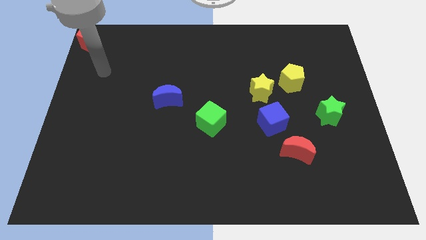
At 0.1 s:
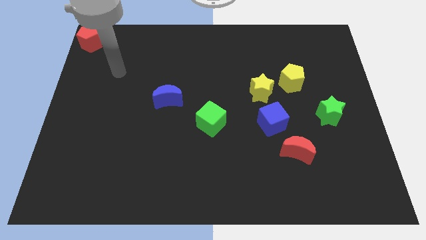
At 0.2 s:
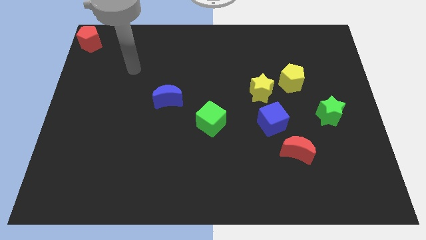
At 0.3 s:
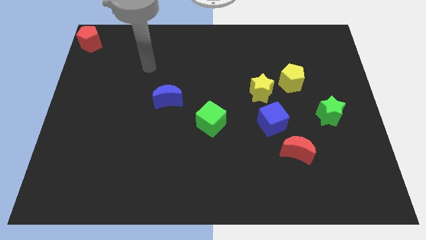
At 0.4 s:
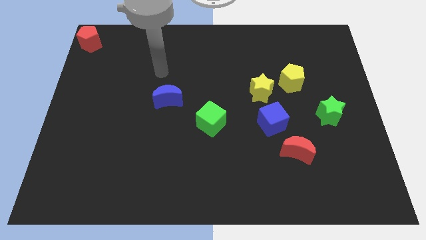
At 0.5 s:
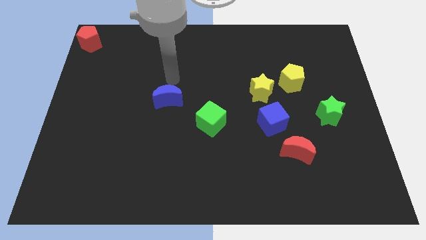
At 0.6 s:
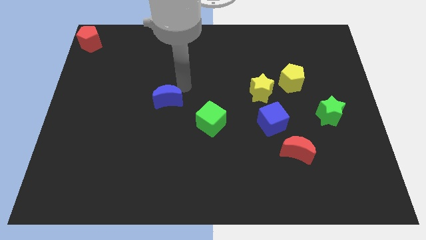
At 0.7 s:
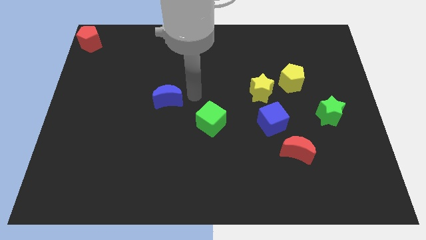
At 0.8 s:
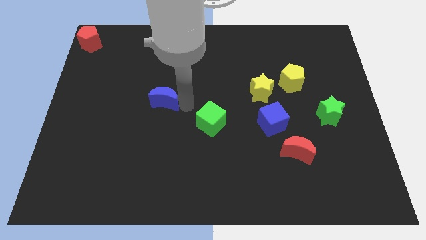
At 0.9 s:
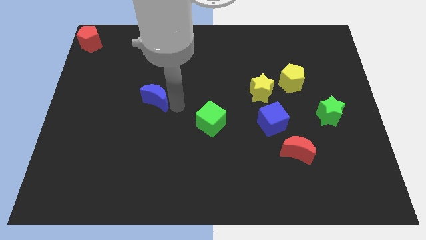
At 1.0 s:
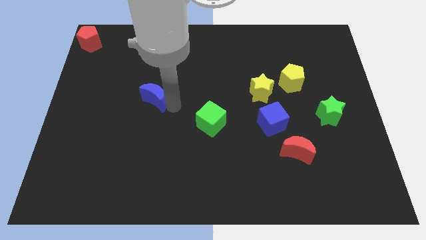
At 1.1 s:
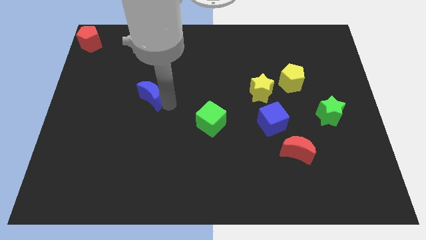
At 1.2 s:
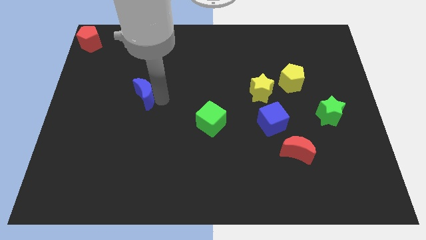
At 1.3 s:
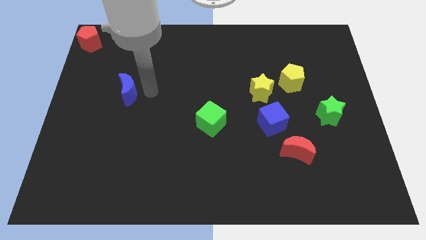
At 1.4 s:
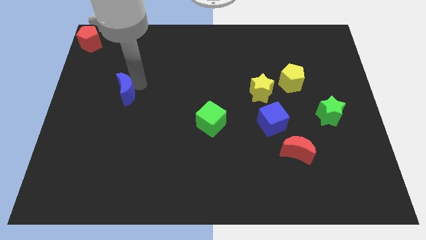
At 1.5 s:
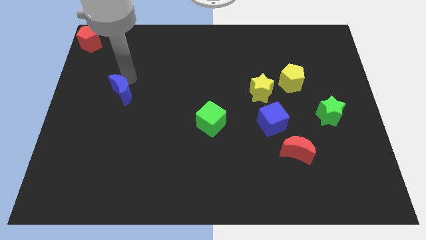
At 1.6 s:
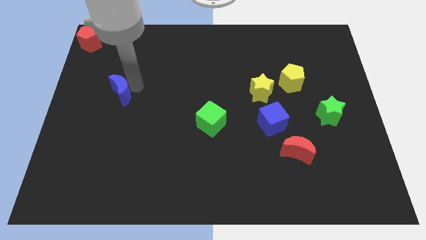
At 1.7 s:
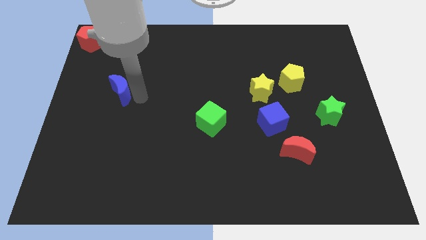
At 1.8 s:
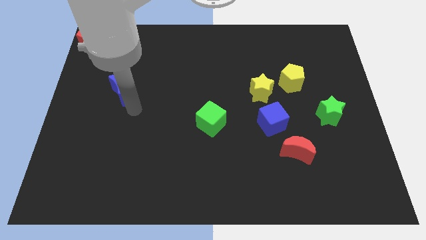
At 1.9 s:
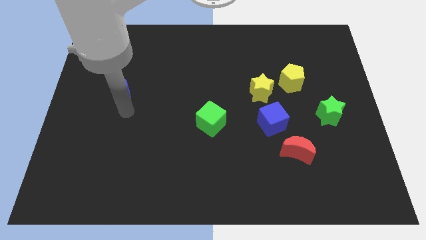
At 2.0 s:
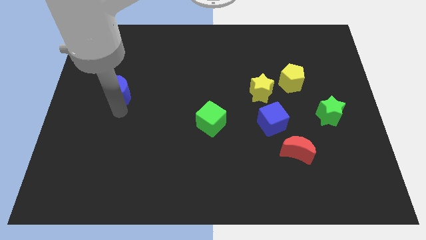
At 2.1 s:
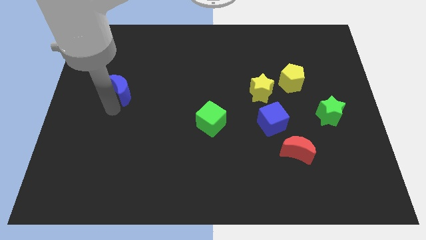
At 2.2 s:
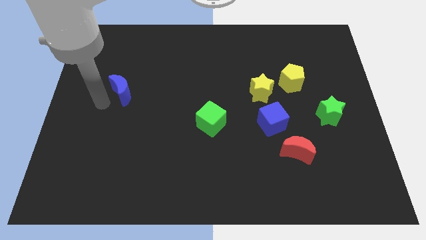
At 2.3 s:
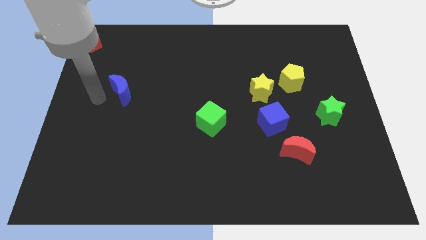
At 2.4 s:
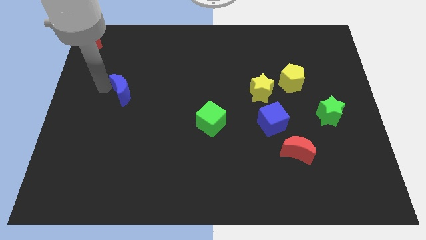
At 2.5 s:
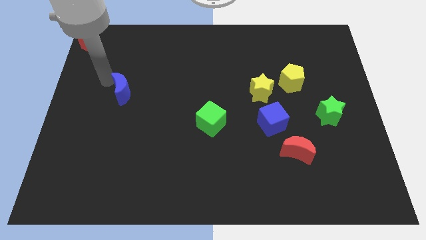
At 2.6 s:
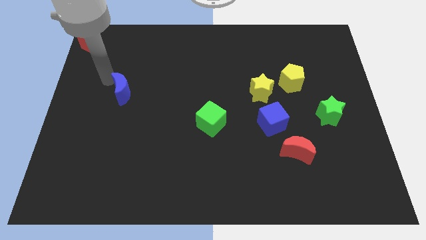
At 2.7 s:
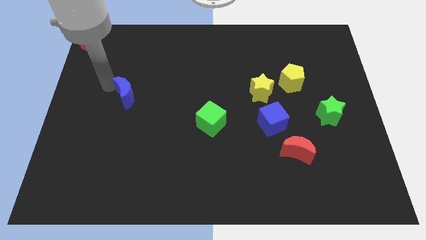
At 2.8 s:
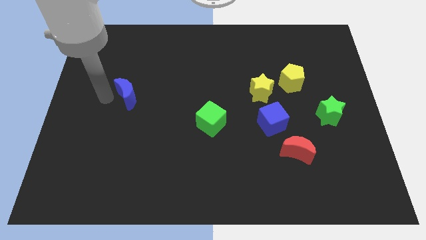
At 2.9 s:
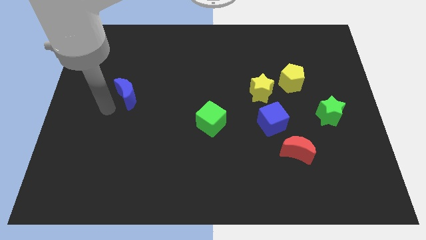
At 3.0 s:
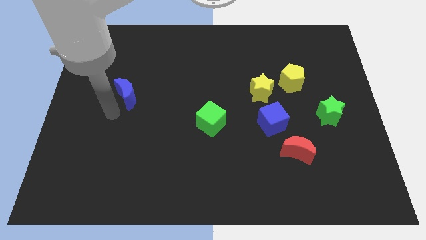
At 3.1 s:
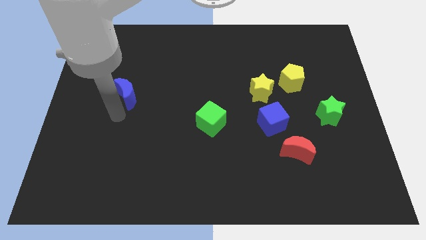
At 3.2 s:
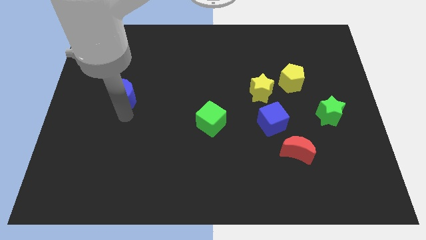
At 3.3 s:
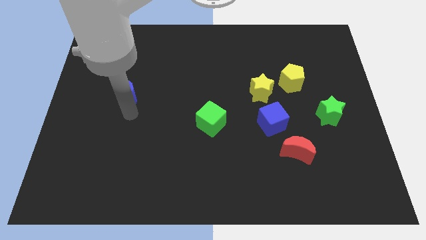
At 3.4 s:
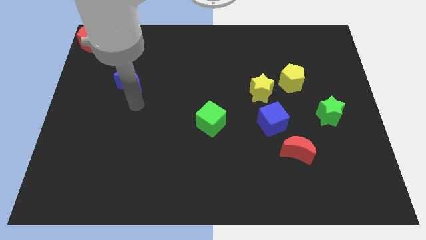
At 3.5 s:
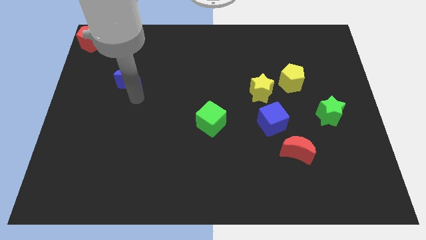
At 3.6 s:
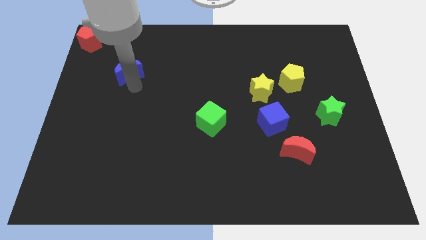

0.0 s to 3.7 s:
push blue moon slightly upwards

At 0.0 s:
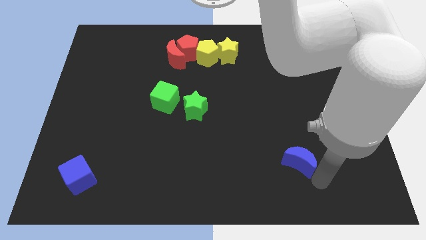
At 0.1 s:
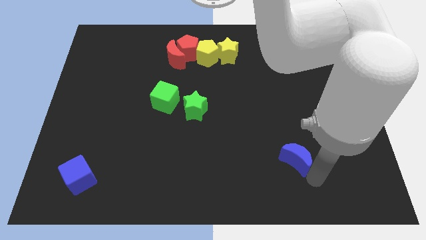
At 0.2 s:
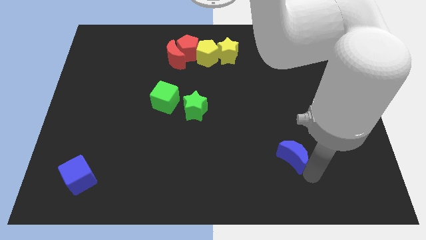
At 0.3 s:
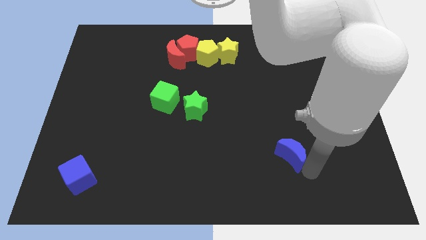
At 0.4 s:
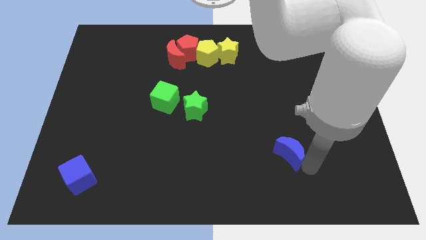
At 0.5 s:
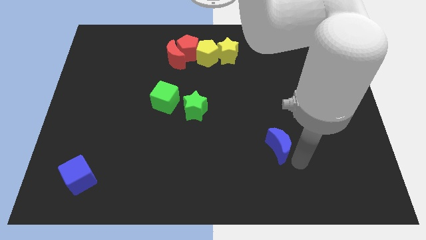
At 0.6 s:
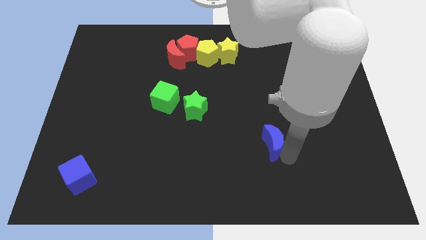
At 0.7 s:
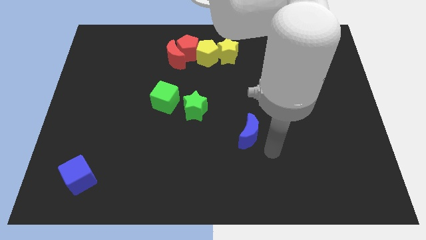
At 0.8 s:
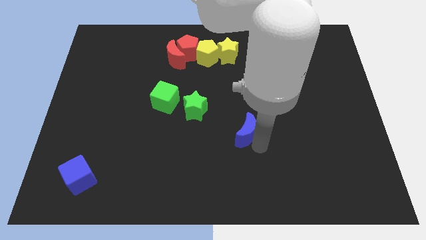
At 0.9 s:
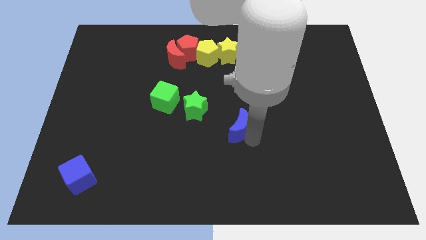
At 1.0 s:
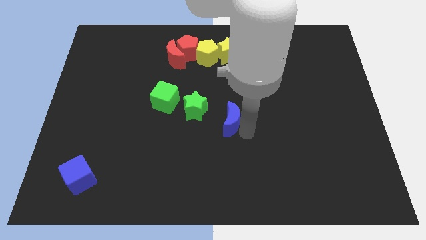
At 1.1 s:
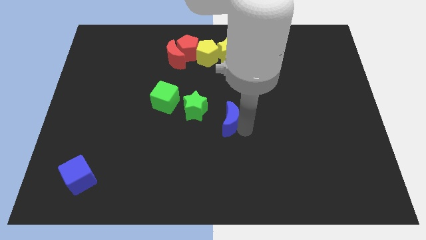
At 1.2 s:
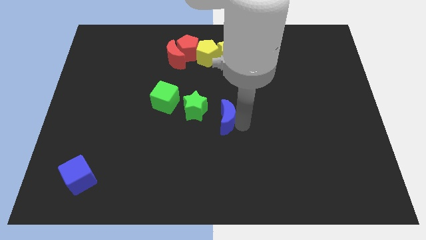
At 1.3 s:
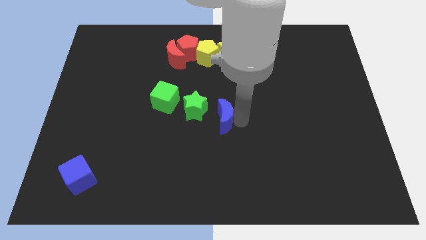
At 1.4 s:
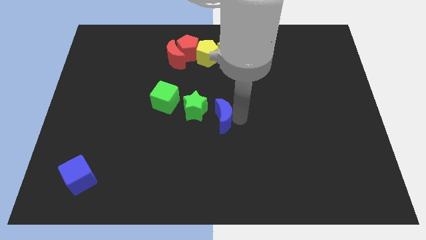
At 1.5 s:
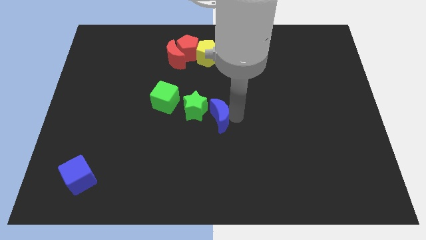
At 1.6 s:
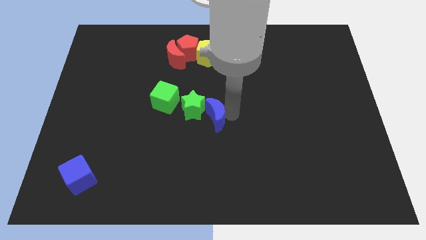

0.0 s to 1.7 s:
push blue crescent into green star

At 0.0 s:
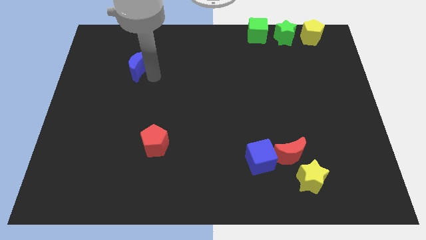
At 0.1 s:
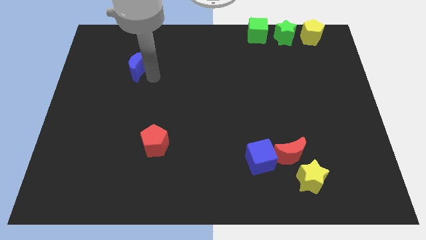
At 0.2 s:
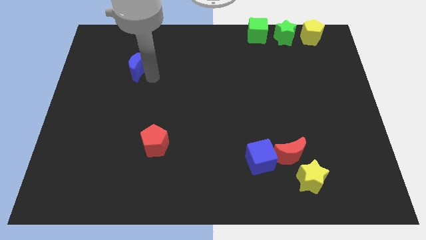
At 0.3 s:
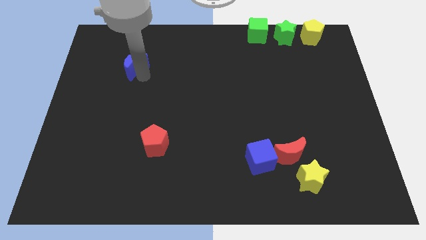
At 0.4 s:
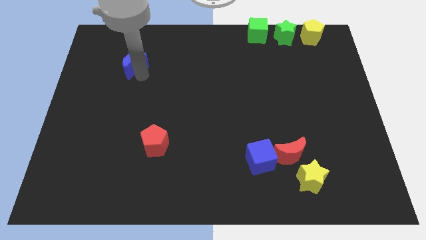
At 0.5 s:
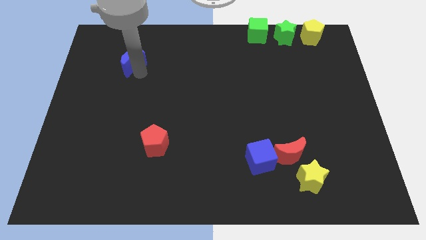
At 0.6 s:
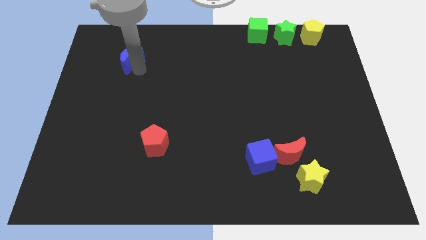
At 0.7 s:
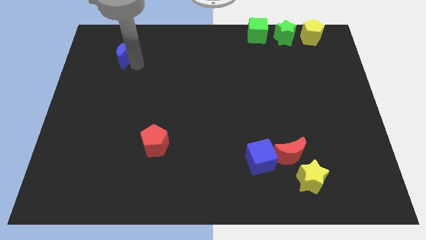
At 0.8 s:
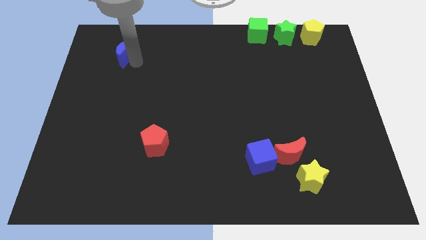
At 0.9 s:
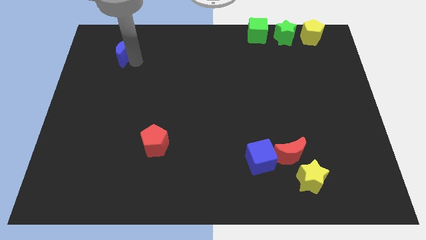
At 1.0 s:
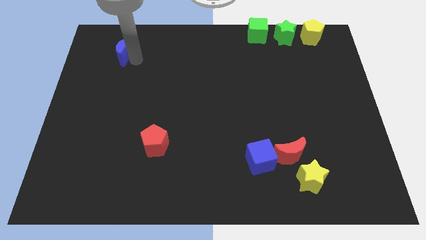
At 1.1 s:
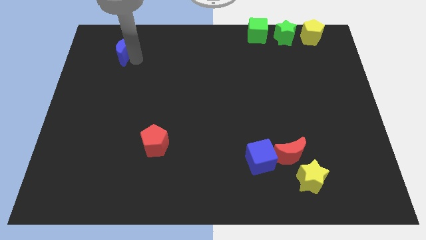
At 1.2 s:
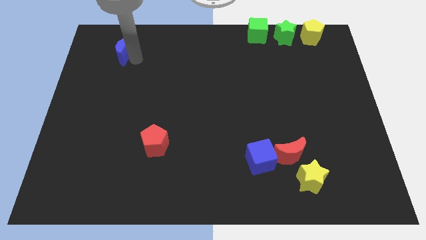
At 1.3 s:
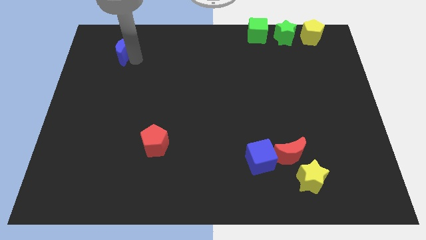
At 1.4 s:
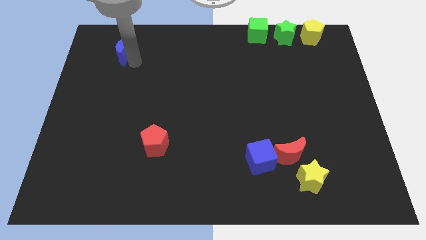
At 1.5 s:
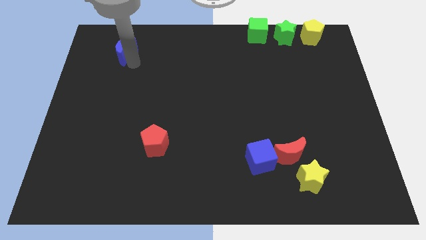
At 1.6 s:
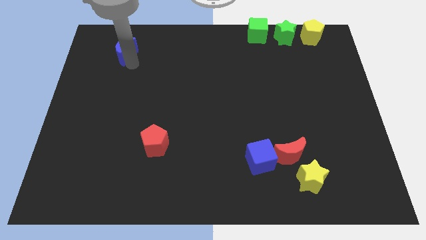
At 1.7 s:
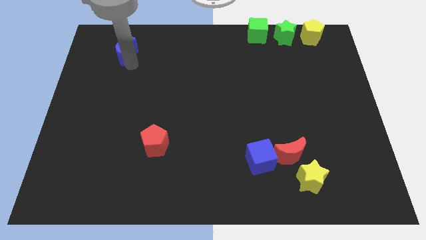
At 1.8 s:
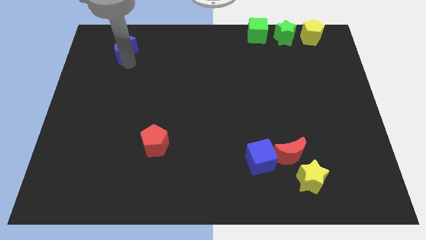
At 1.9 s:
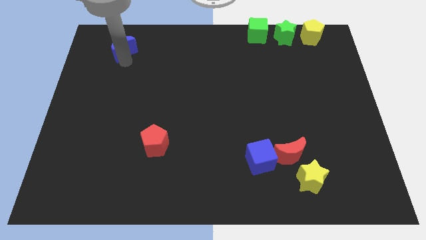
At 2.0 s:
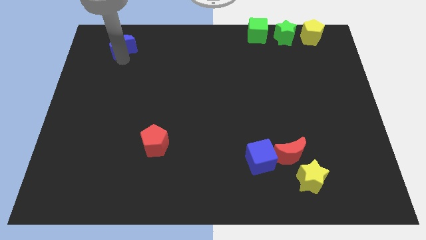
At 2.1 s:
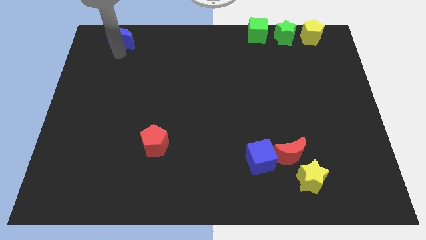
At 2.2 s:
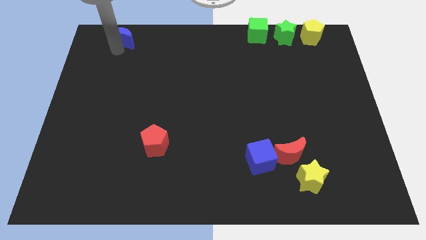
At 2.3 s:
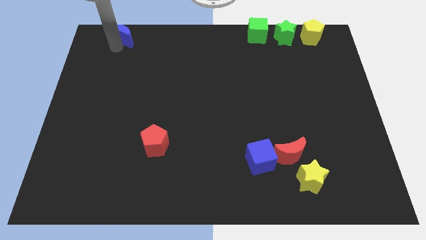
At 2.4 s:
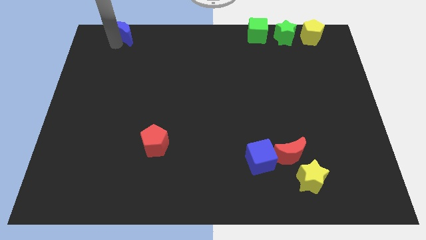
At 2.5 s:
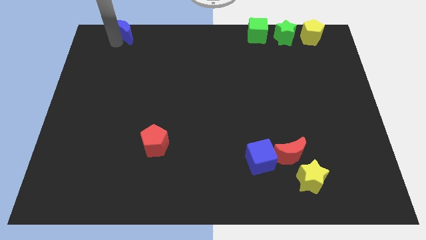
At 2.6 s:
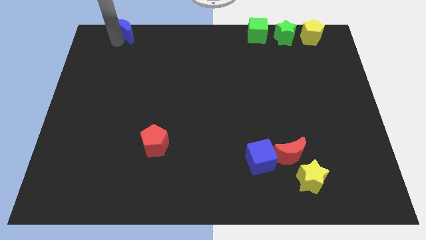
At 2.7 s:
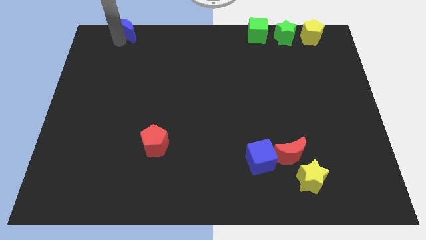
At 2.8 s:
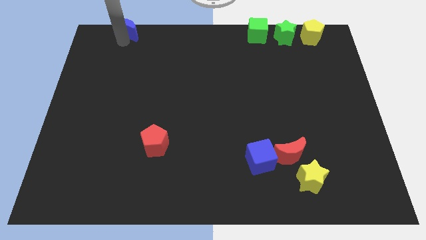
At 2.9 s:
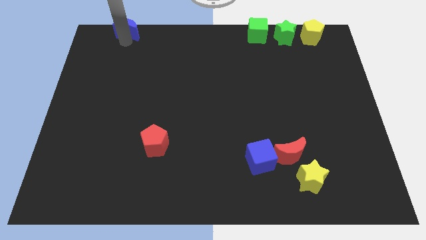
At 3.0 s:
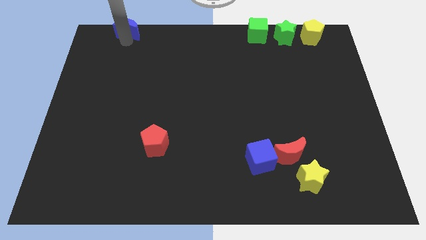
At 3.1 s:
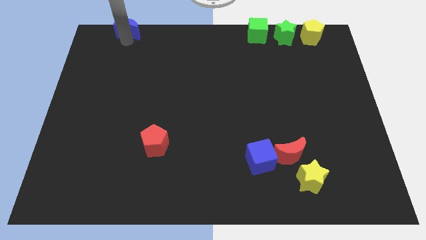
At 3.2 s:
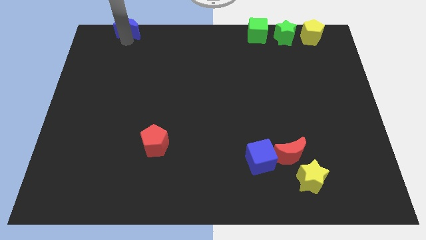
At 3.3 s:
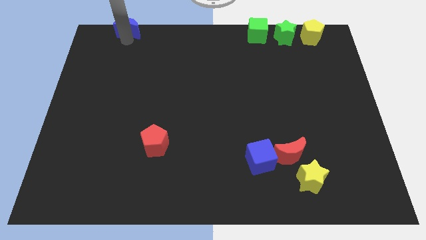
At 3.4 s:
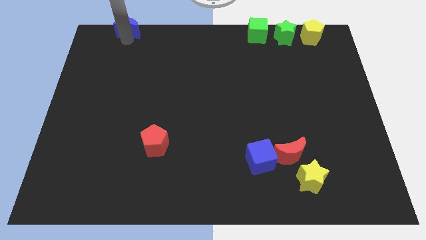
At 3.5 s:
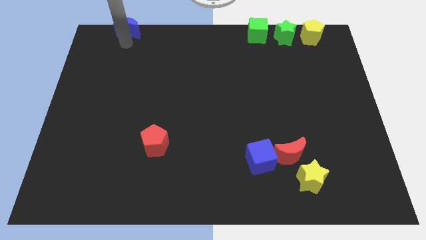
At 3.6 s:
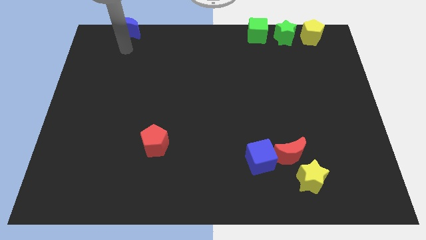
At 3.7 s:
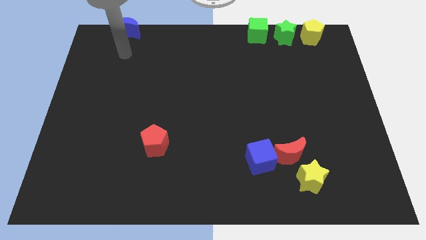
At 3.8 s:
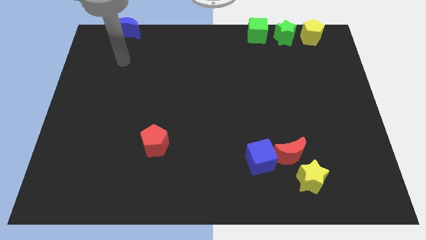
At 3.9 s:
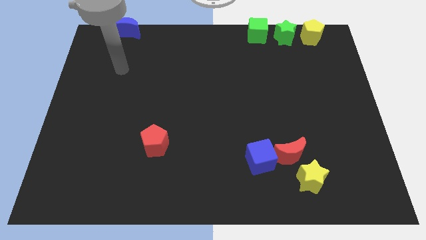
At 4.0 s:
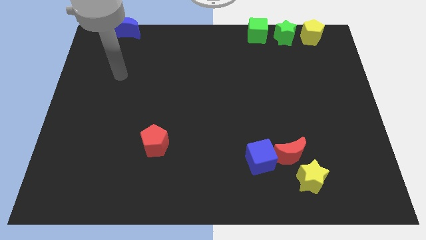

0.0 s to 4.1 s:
push the blue moon to the horizontal left side of the green cube
